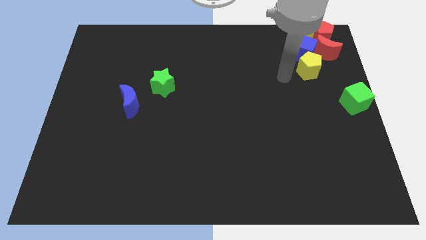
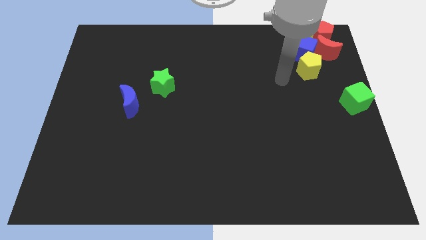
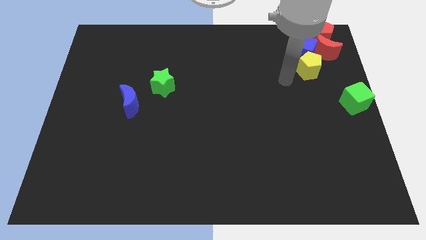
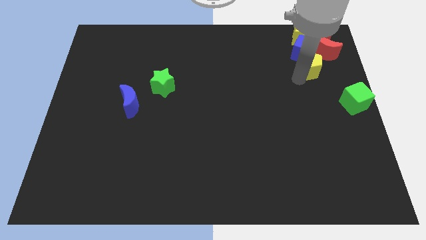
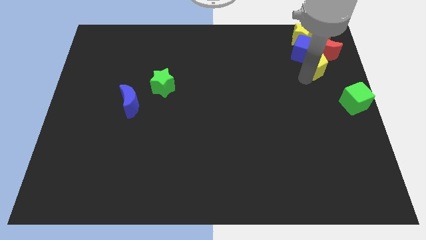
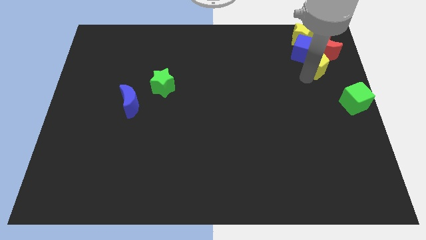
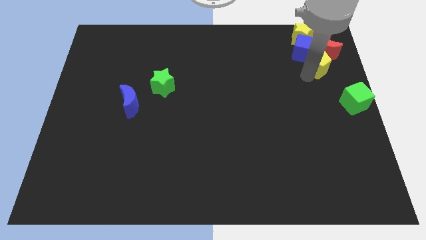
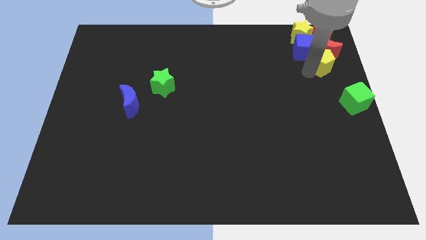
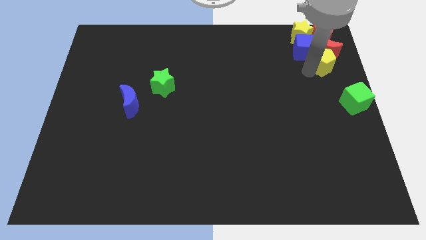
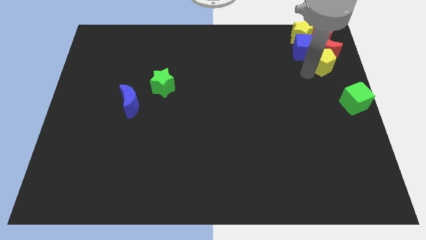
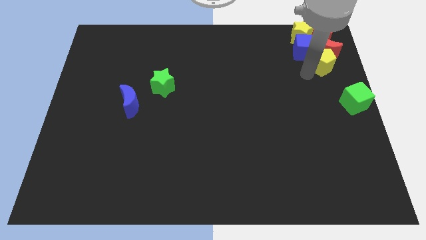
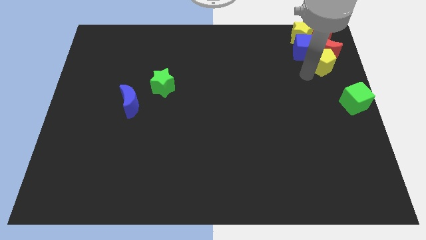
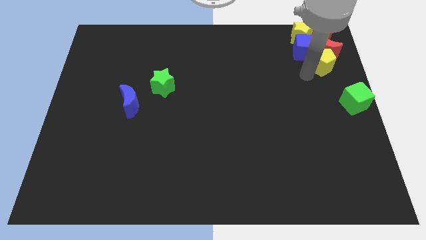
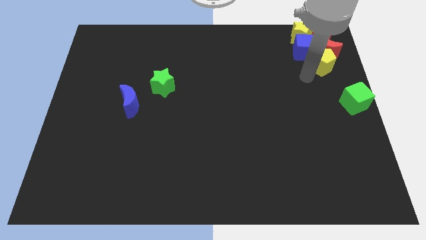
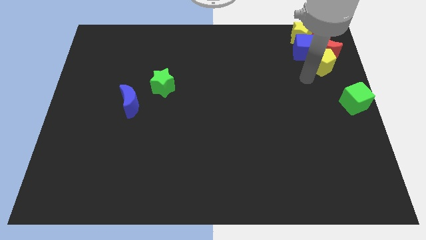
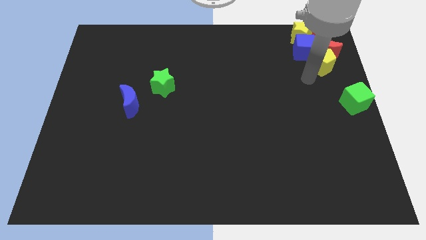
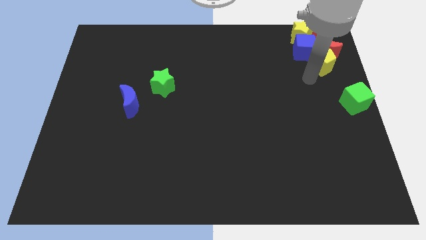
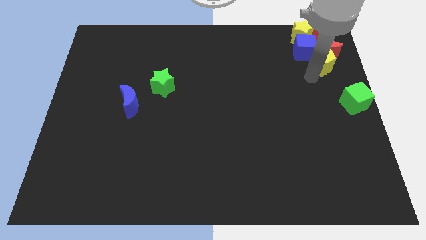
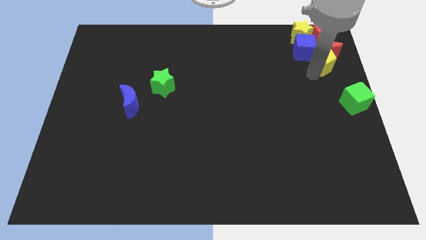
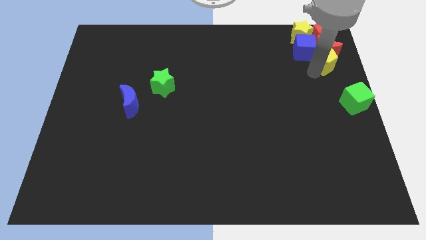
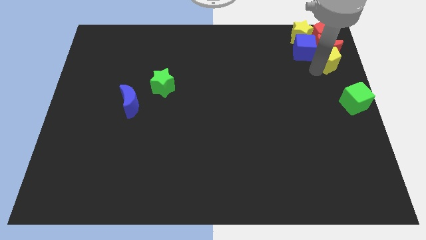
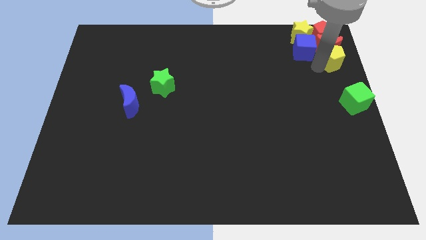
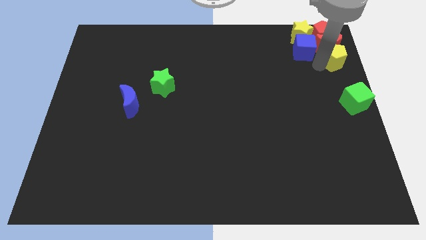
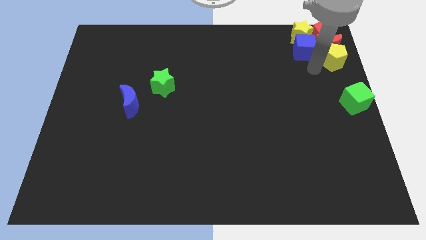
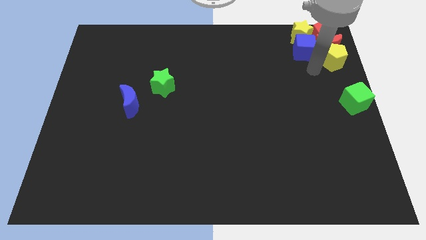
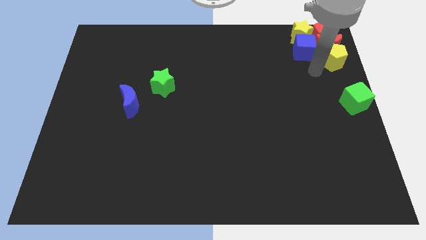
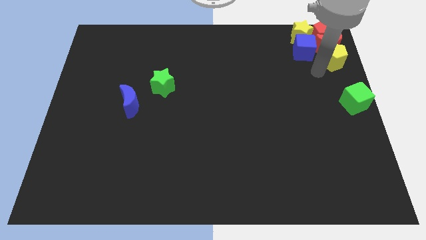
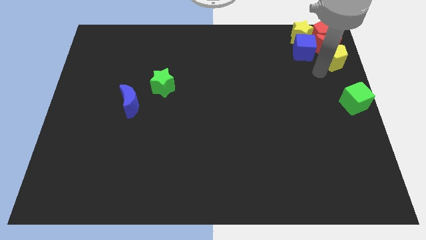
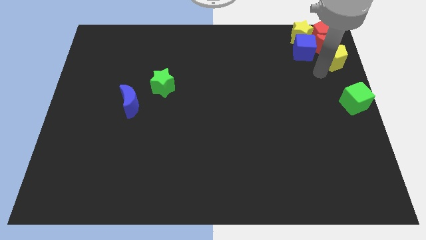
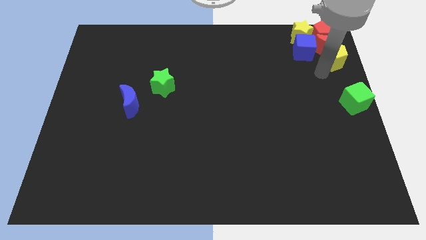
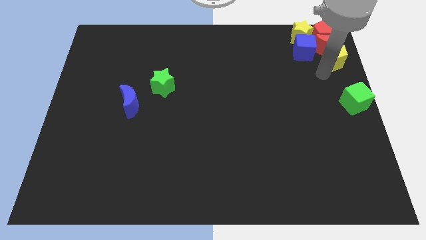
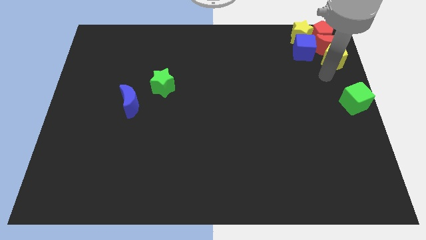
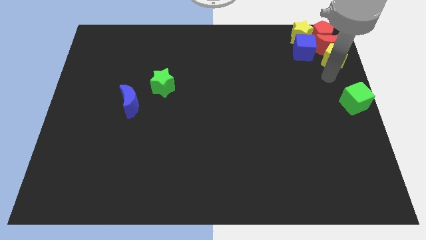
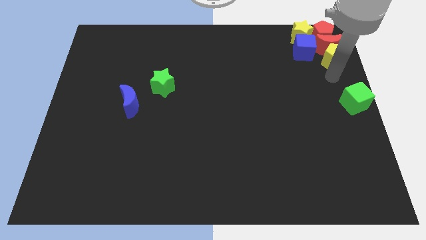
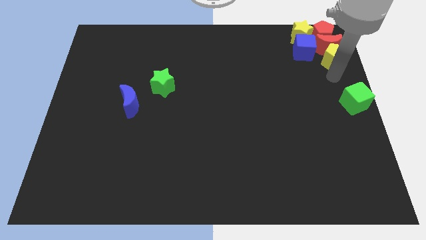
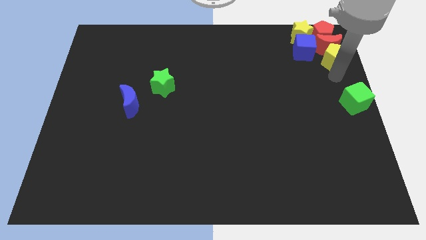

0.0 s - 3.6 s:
move the yellow pentagon to the bottom of the red moon

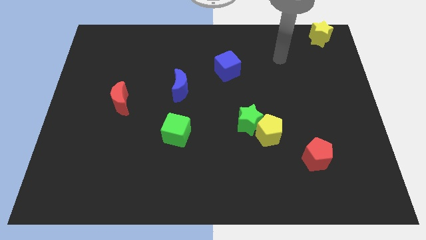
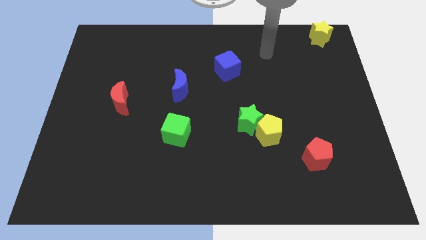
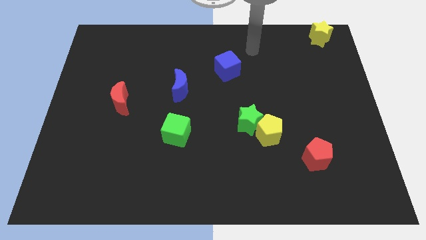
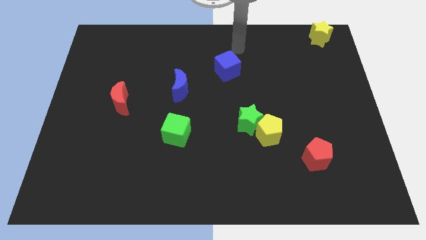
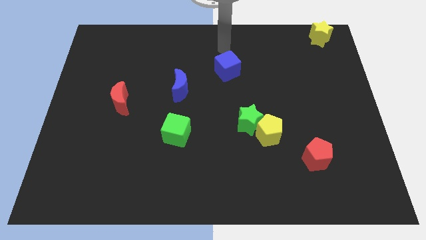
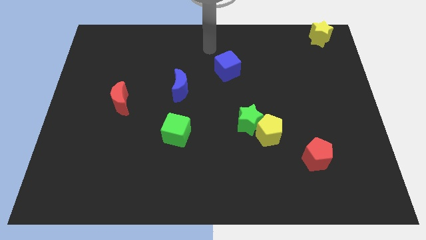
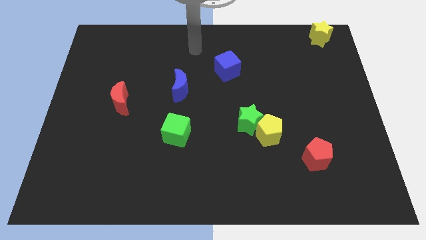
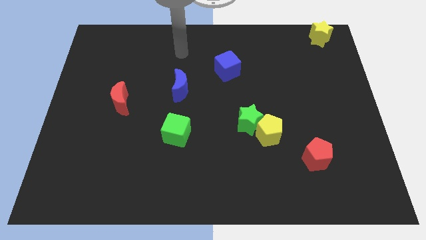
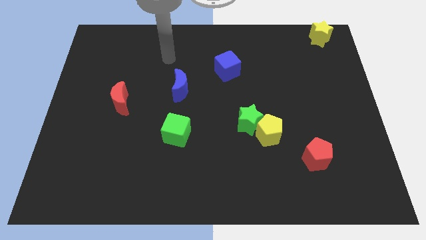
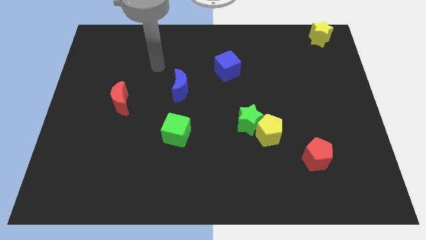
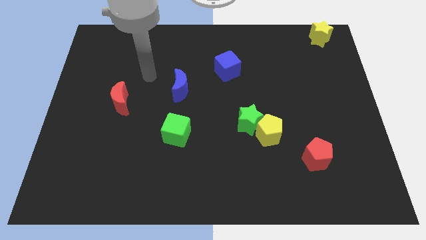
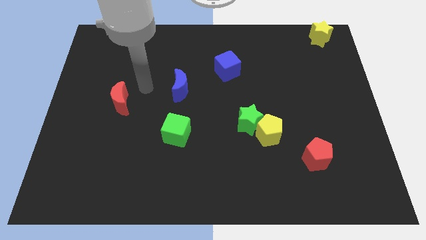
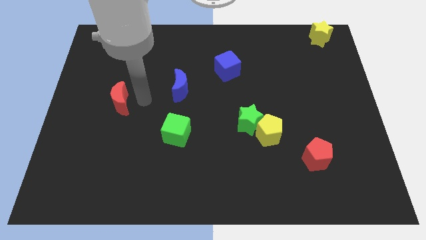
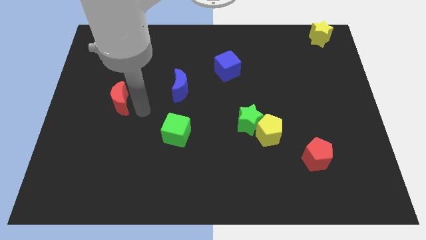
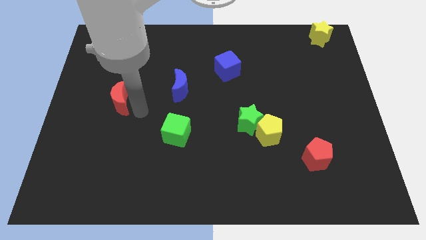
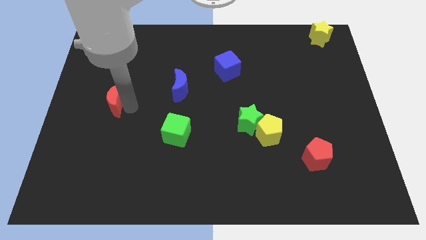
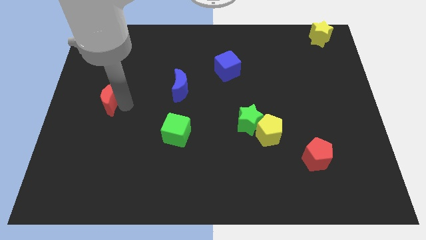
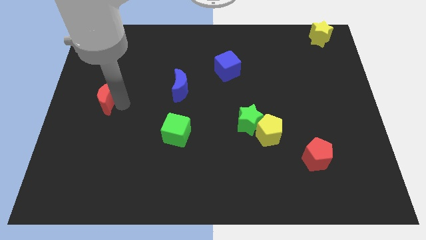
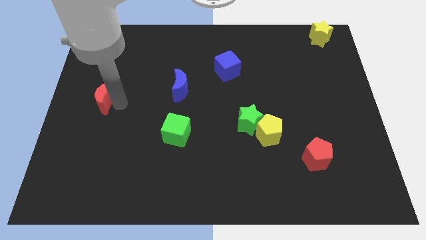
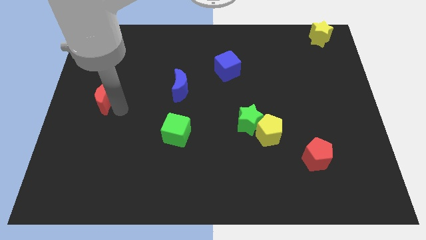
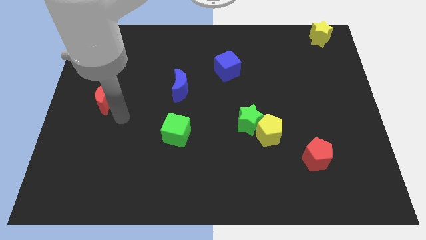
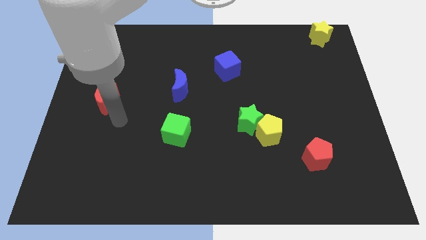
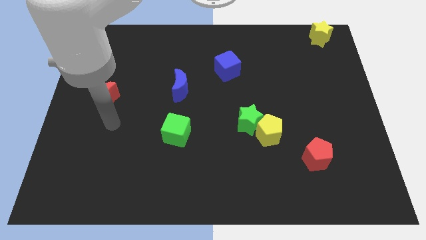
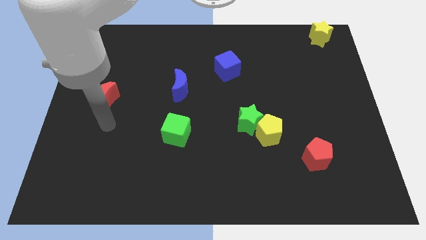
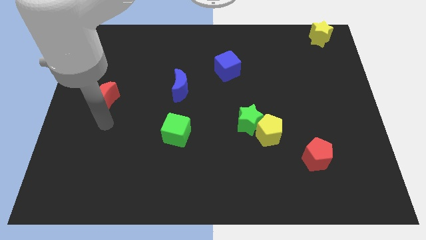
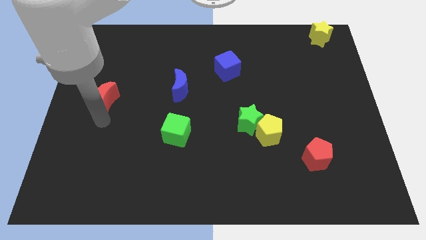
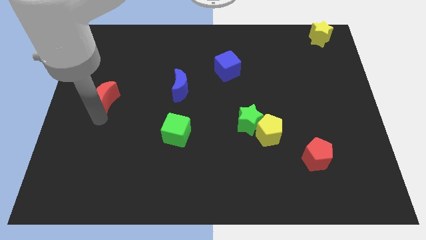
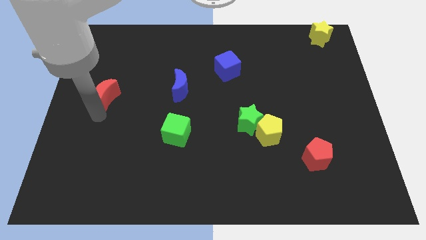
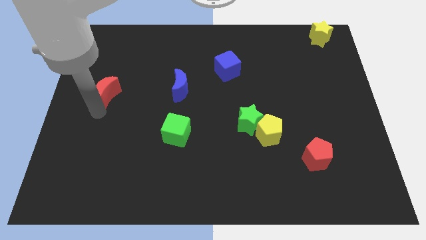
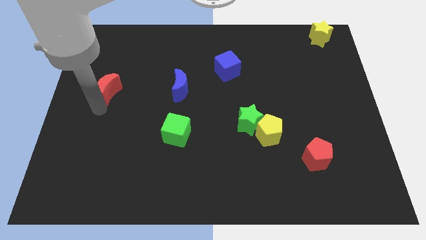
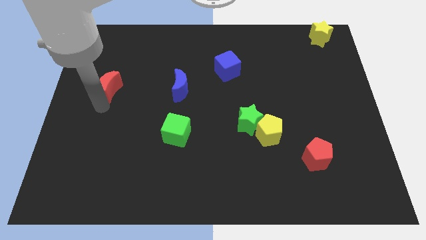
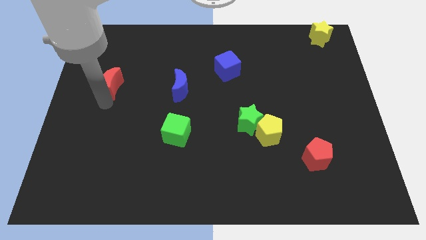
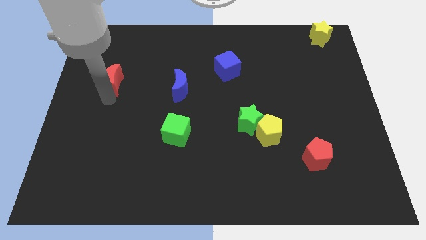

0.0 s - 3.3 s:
push the red crescent to the left side of the blue crescent

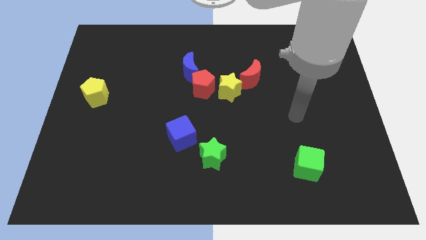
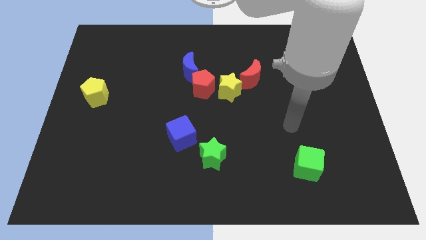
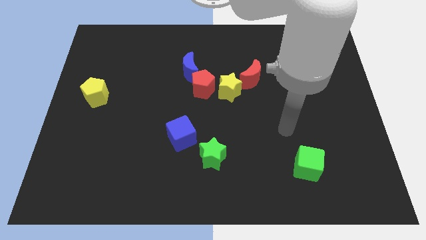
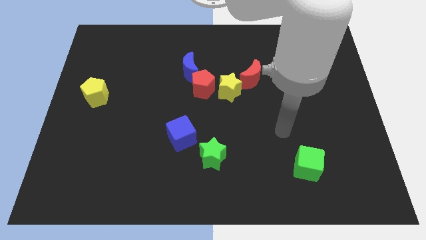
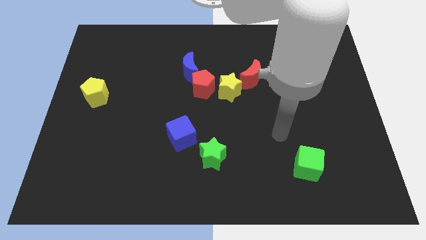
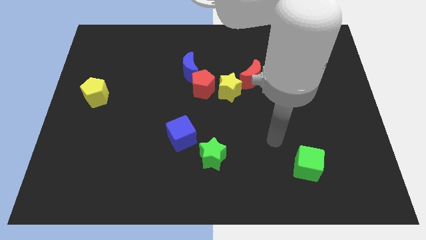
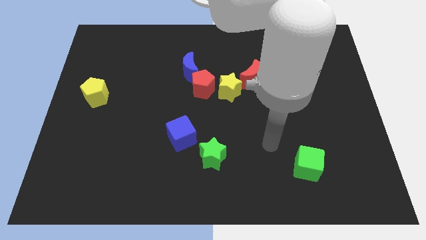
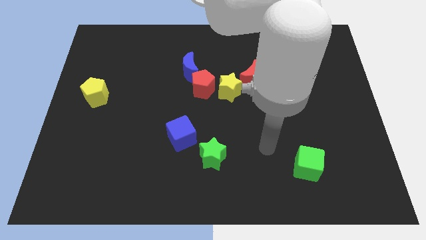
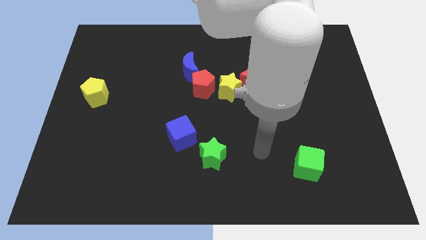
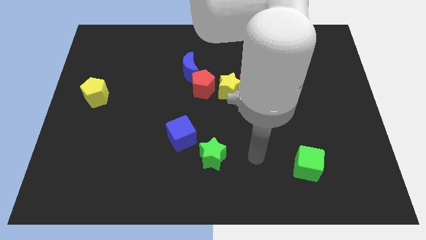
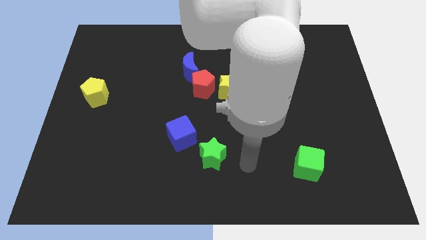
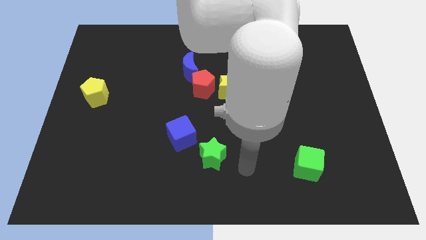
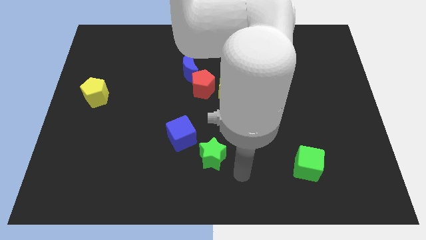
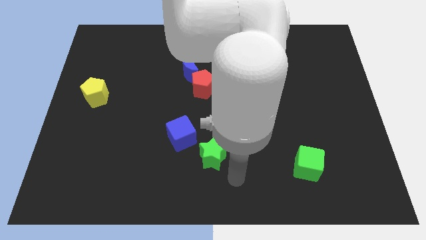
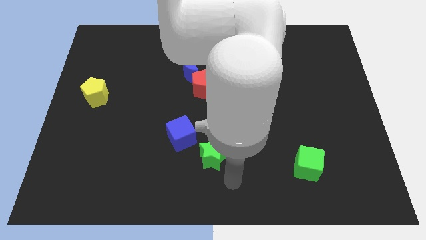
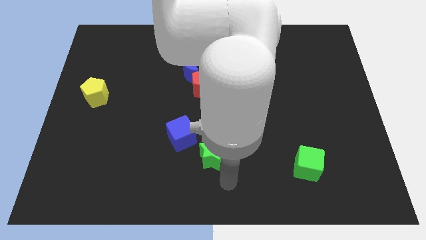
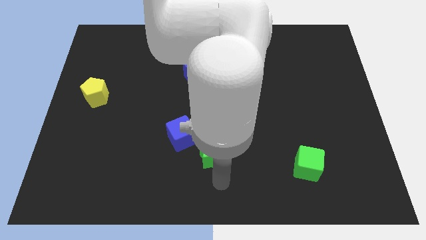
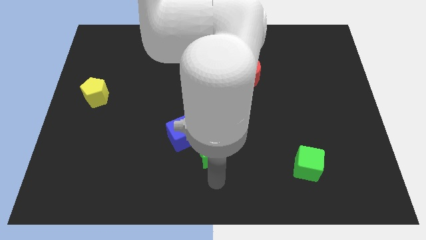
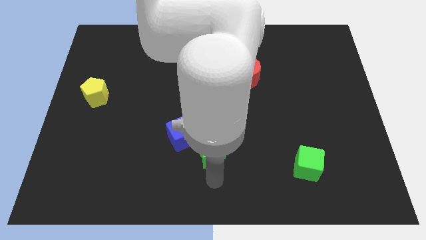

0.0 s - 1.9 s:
move the arm bottom of the green star
